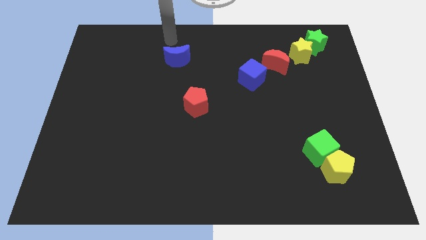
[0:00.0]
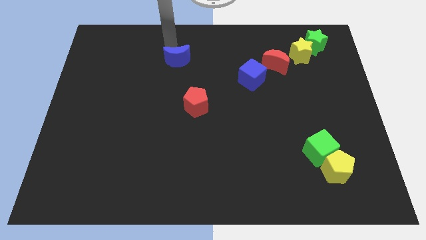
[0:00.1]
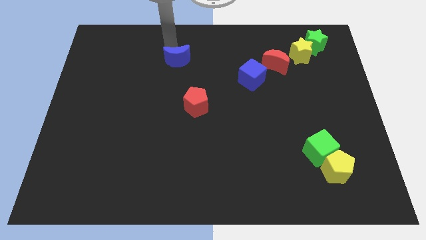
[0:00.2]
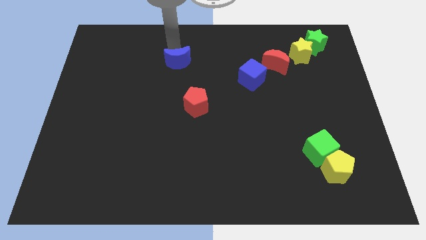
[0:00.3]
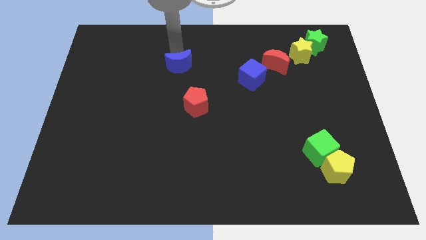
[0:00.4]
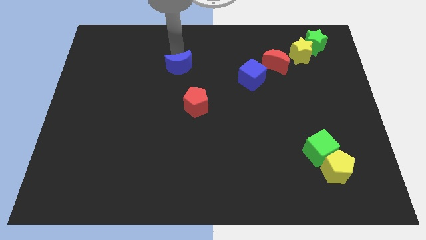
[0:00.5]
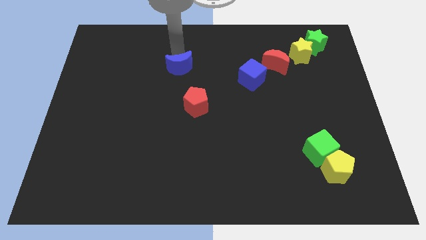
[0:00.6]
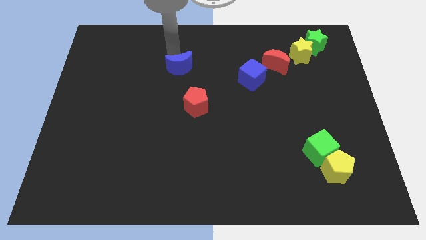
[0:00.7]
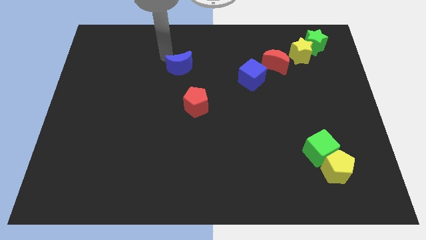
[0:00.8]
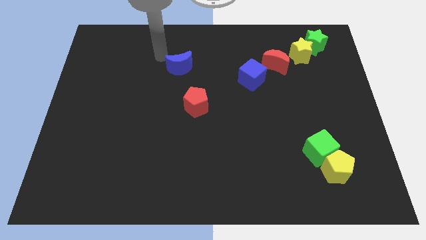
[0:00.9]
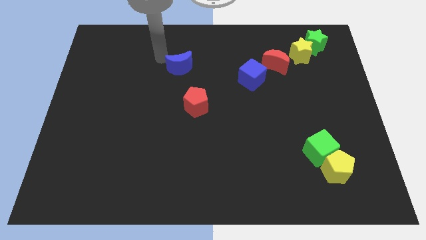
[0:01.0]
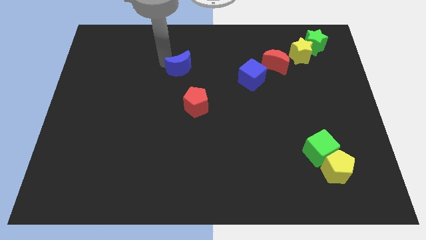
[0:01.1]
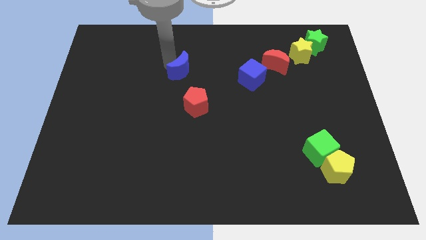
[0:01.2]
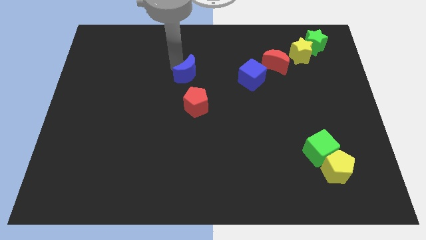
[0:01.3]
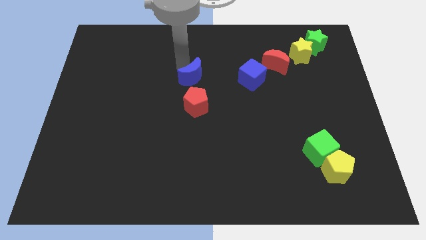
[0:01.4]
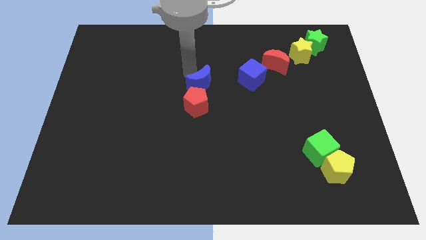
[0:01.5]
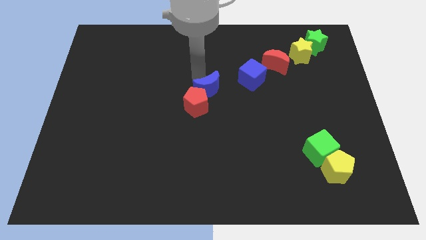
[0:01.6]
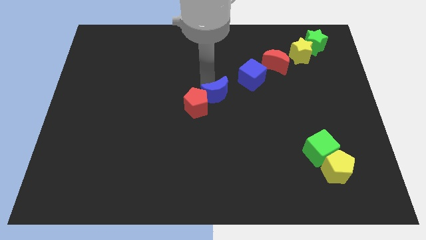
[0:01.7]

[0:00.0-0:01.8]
push the blue moon into the red pentagon

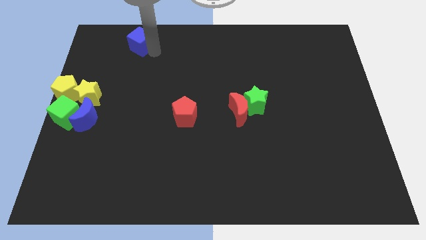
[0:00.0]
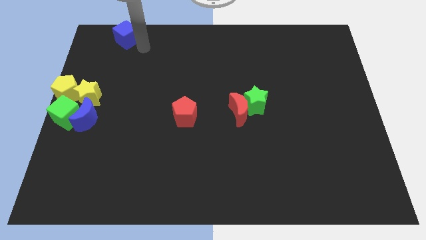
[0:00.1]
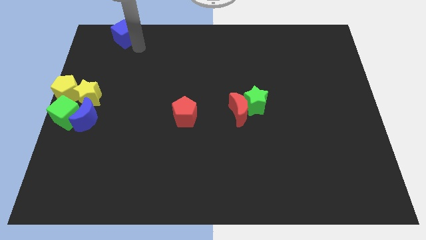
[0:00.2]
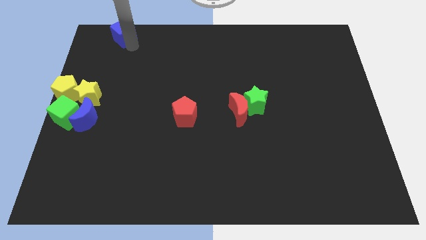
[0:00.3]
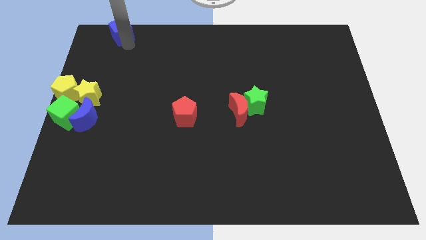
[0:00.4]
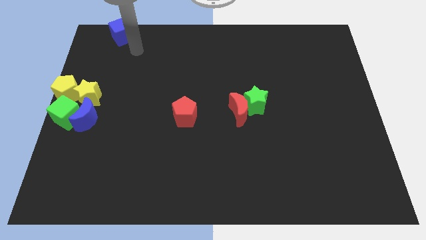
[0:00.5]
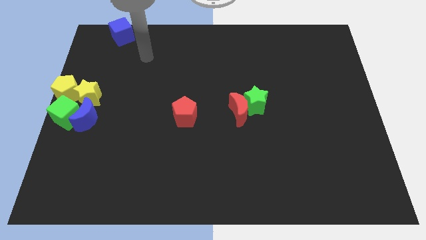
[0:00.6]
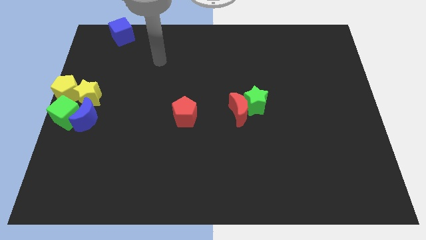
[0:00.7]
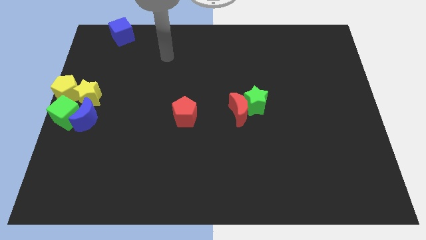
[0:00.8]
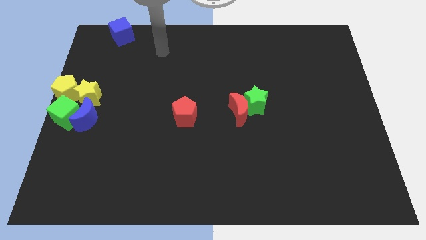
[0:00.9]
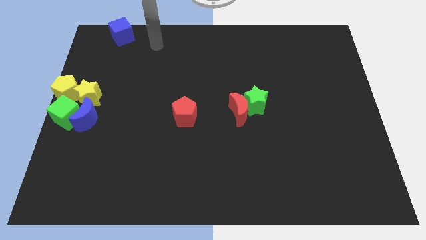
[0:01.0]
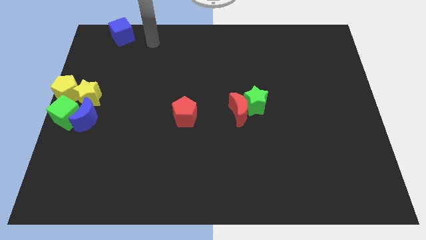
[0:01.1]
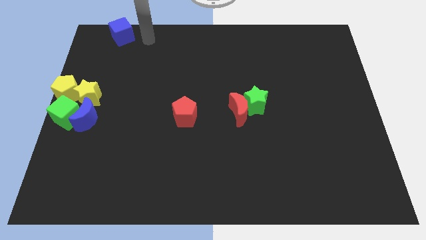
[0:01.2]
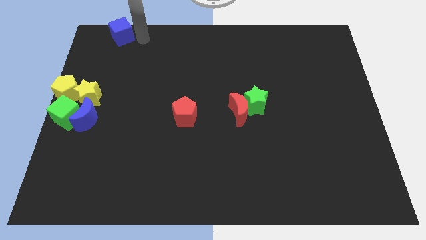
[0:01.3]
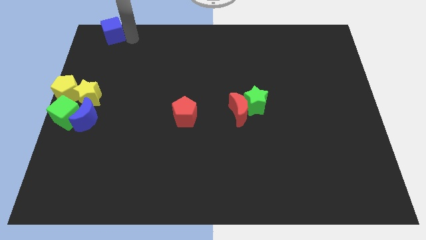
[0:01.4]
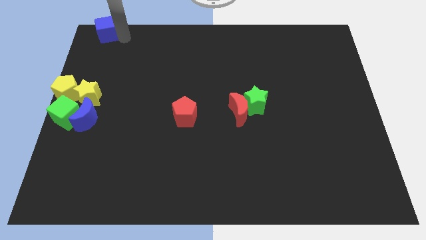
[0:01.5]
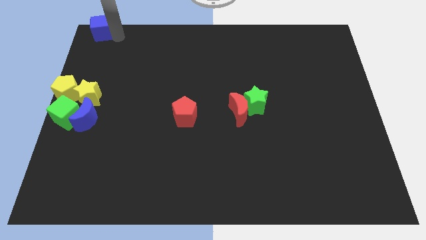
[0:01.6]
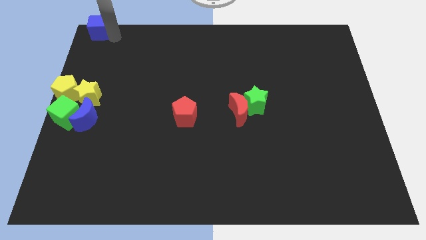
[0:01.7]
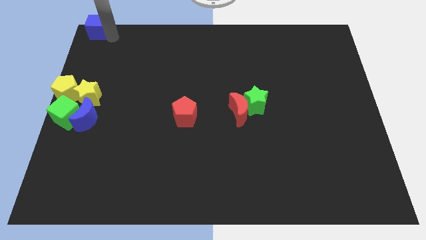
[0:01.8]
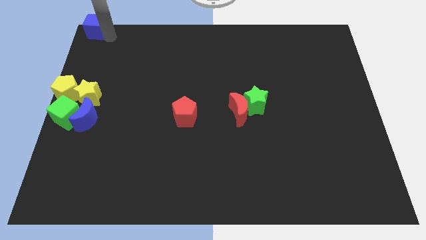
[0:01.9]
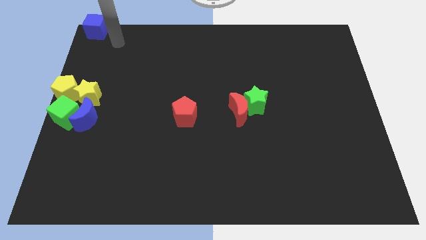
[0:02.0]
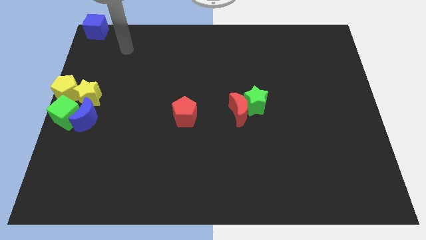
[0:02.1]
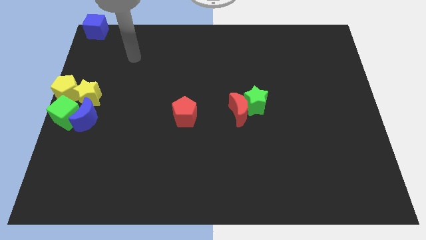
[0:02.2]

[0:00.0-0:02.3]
place the blue cube at the top left of the board

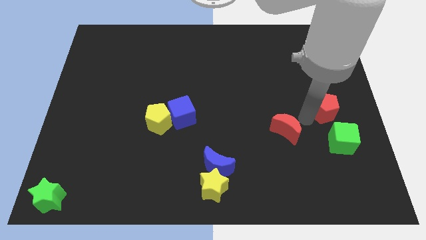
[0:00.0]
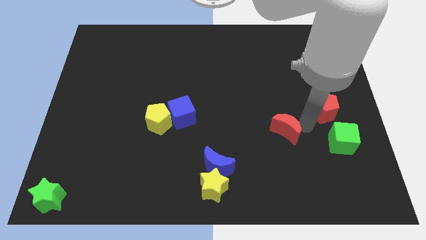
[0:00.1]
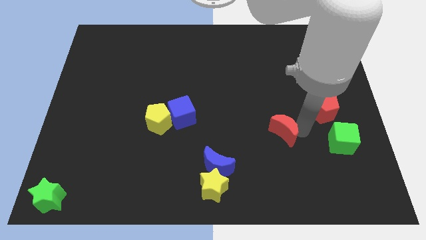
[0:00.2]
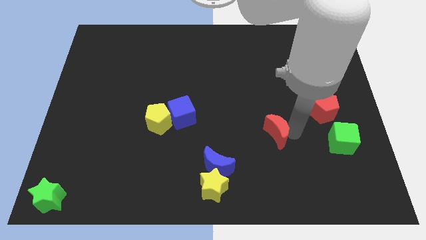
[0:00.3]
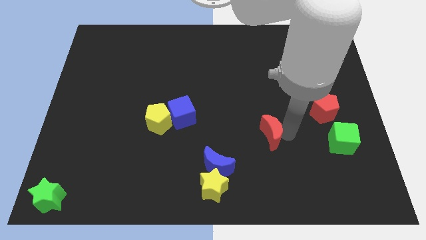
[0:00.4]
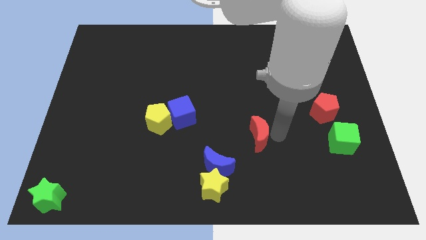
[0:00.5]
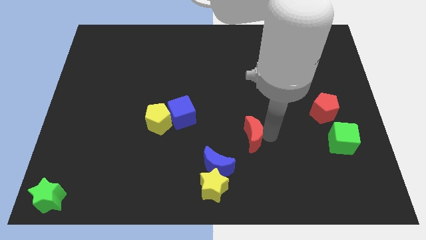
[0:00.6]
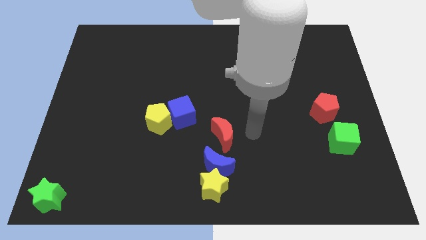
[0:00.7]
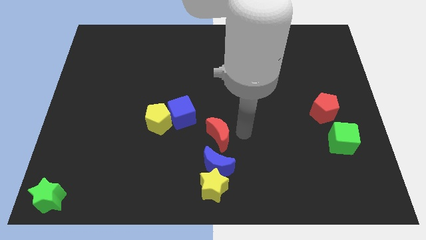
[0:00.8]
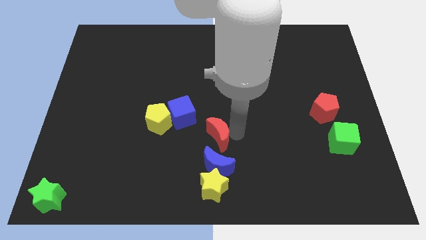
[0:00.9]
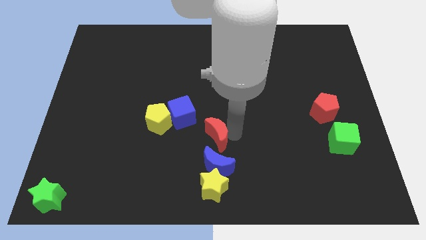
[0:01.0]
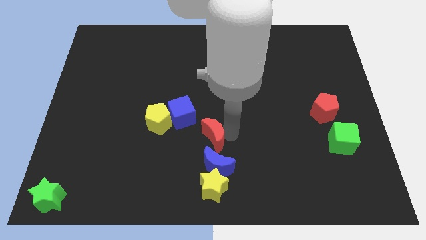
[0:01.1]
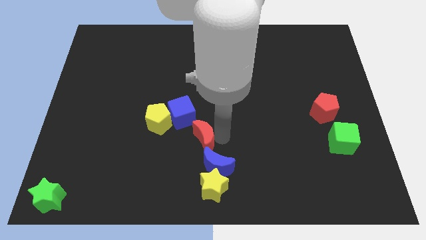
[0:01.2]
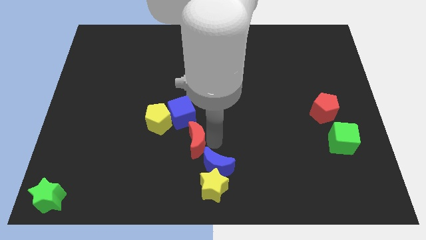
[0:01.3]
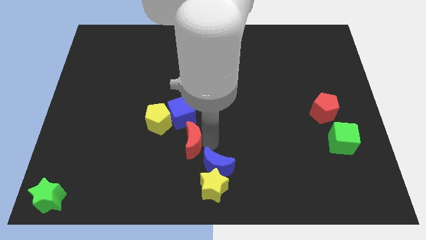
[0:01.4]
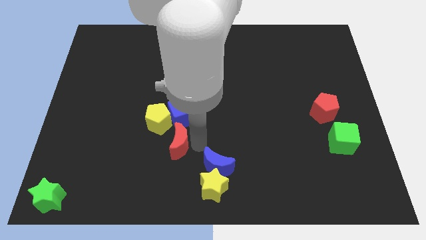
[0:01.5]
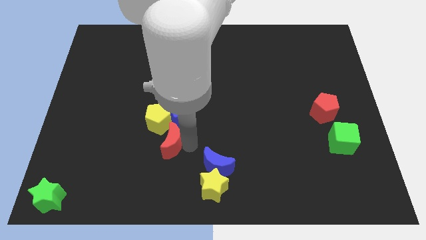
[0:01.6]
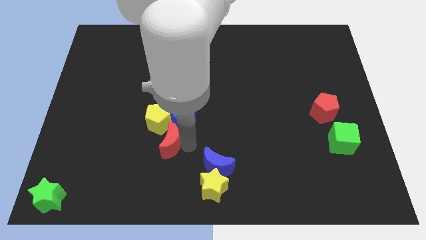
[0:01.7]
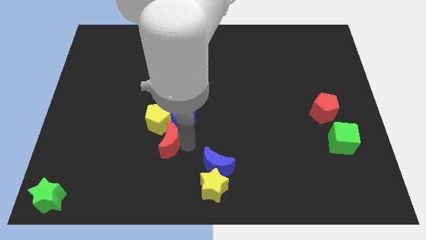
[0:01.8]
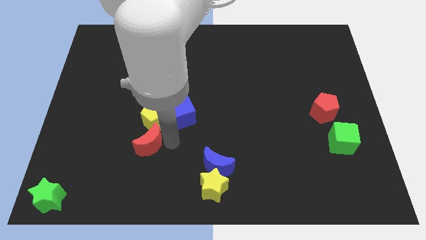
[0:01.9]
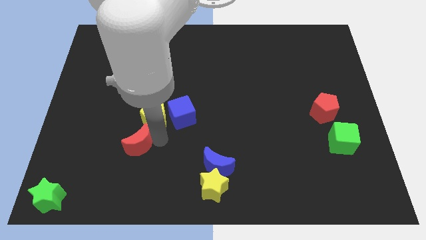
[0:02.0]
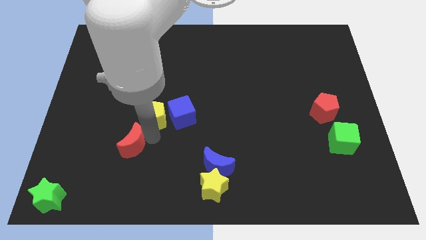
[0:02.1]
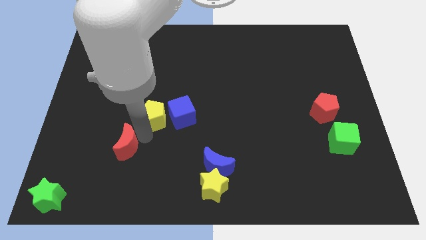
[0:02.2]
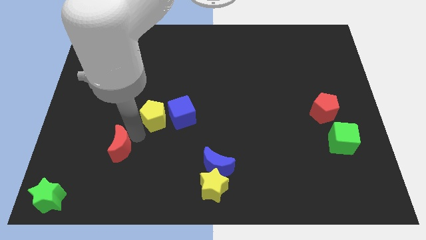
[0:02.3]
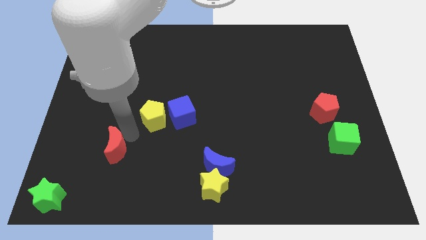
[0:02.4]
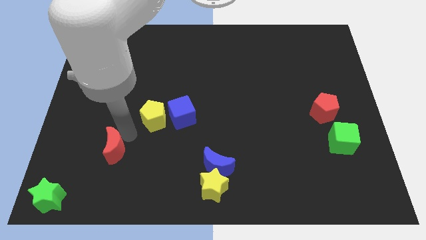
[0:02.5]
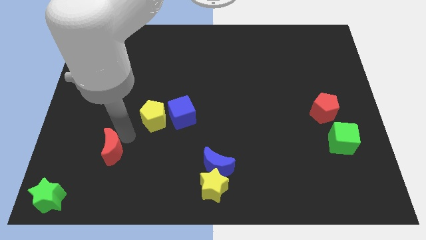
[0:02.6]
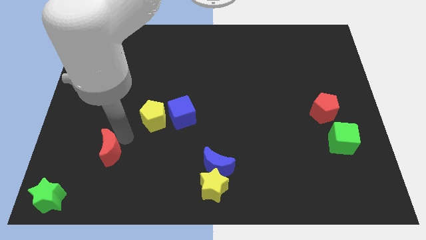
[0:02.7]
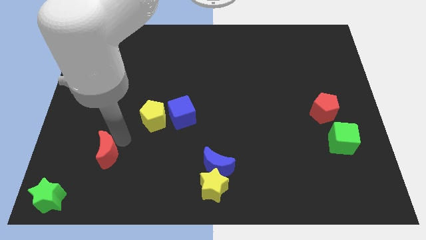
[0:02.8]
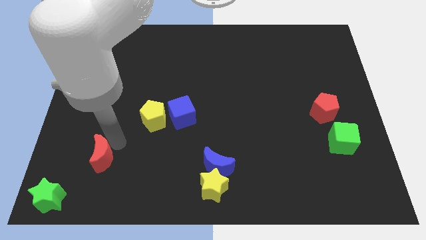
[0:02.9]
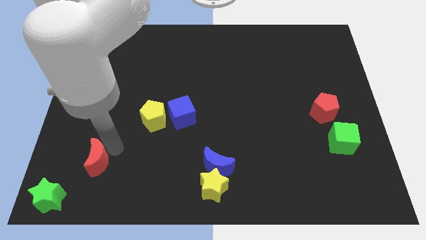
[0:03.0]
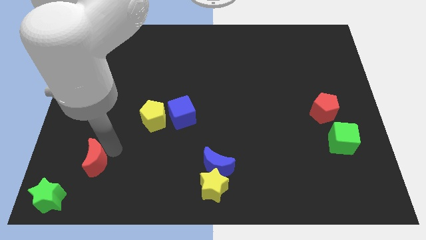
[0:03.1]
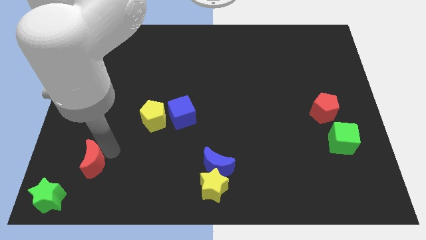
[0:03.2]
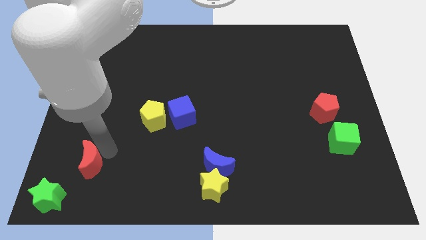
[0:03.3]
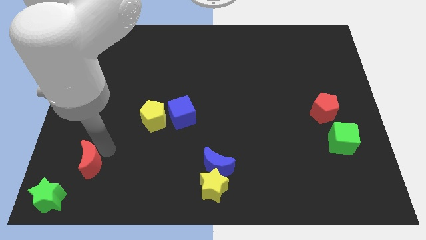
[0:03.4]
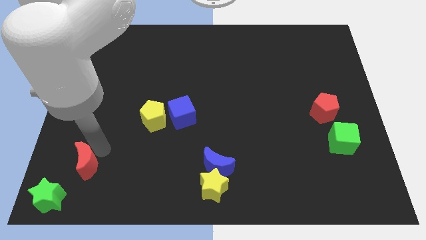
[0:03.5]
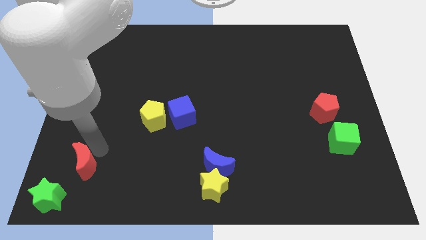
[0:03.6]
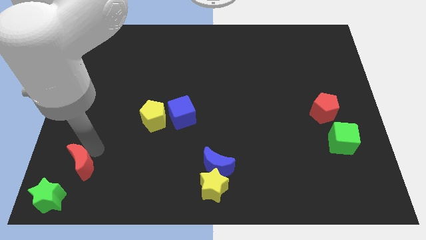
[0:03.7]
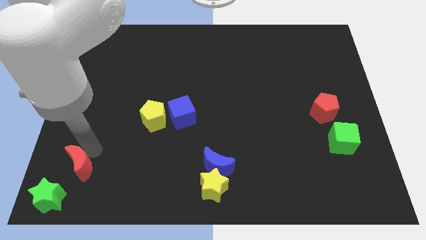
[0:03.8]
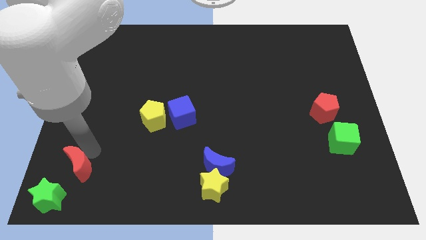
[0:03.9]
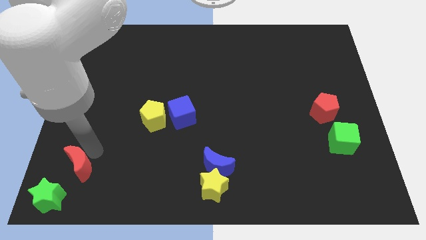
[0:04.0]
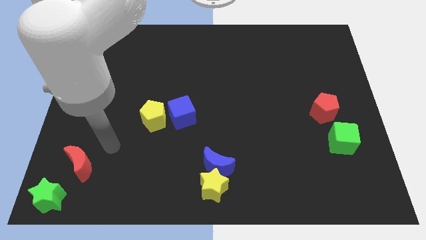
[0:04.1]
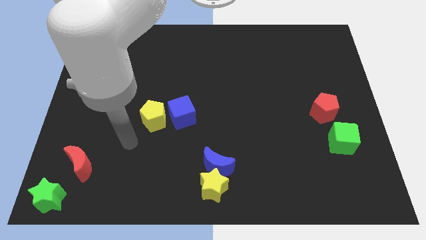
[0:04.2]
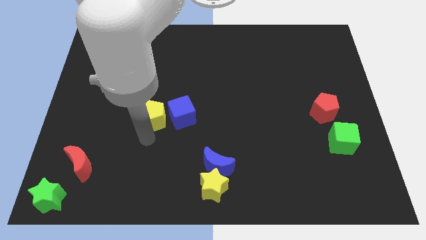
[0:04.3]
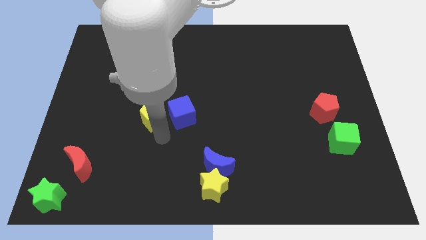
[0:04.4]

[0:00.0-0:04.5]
push the red moon to the top right corner of the green star

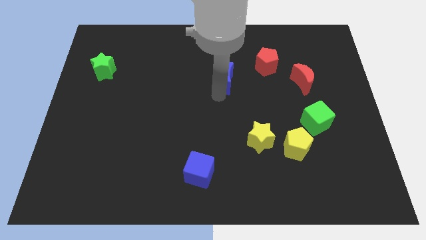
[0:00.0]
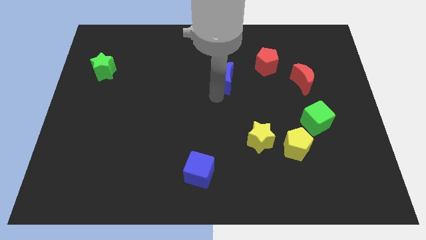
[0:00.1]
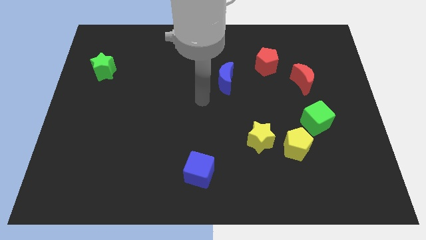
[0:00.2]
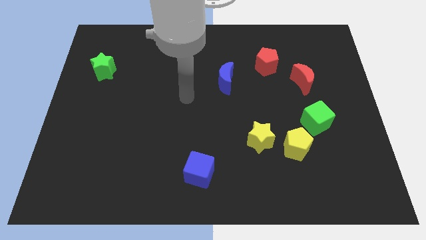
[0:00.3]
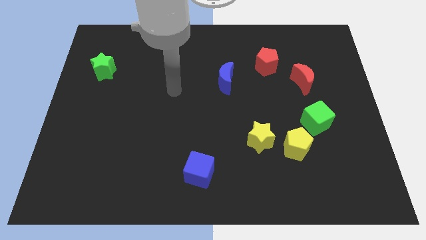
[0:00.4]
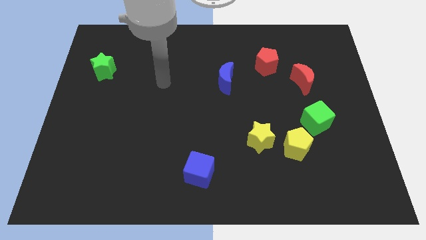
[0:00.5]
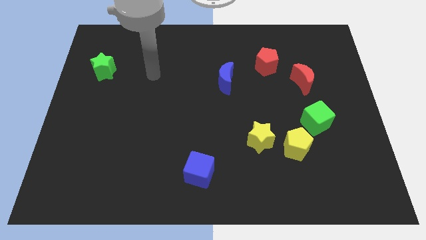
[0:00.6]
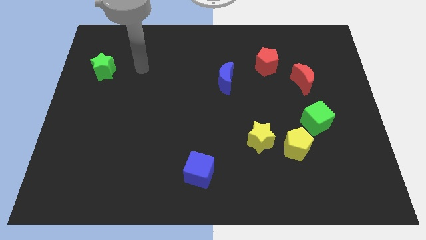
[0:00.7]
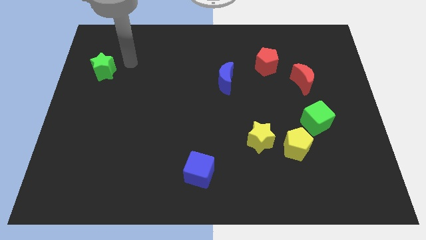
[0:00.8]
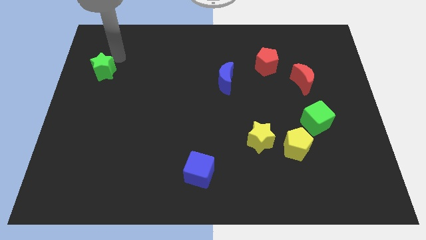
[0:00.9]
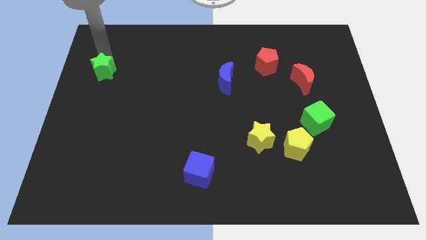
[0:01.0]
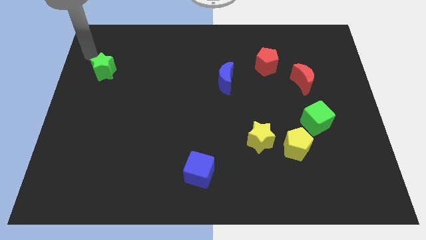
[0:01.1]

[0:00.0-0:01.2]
move your hand towards the top left of the board
